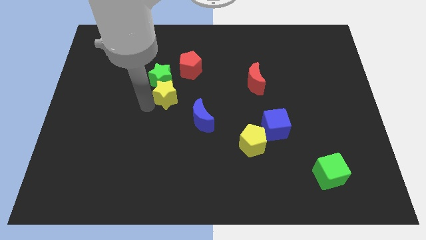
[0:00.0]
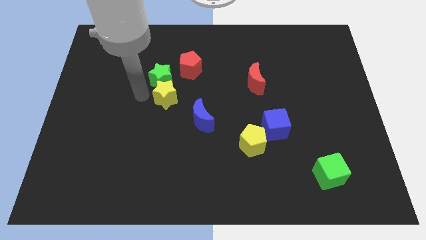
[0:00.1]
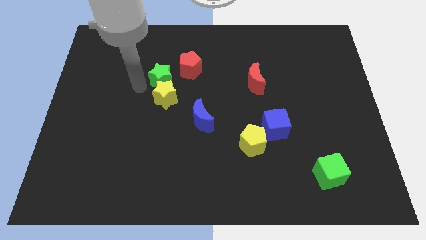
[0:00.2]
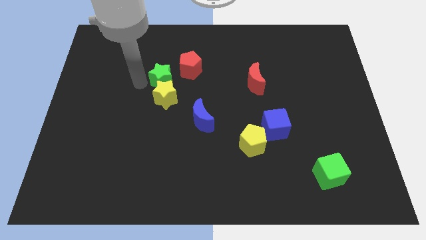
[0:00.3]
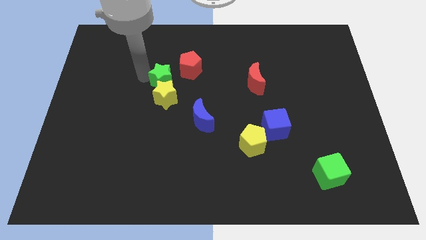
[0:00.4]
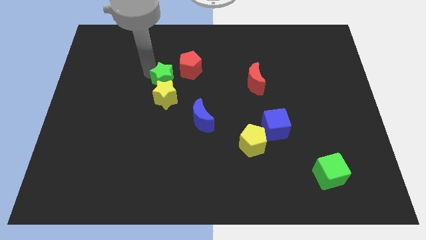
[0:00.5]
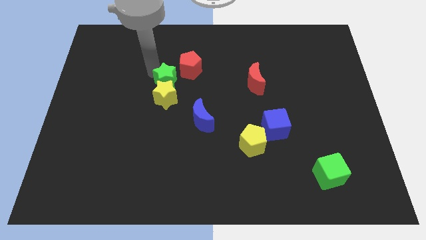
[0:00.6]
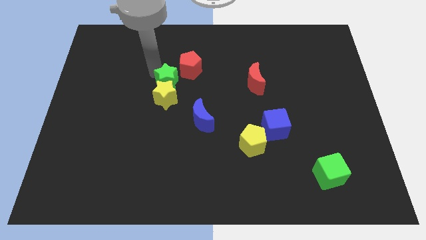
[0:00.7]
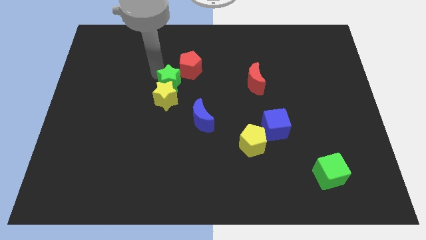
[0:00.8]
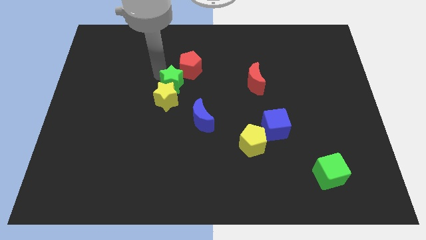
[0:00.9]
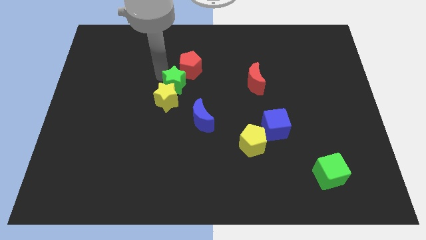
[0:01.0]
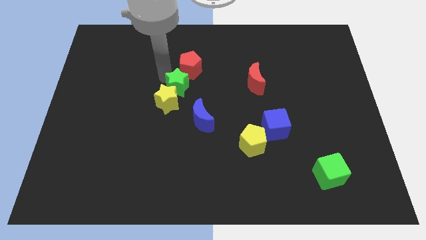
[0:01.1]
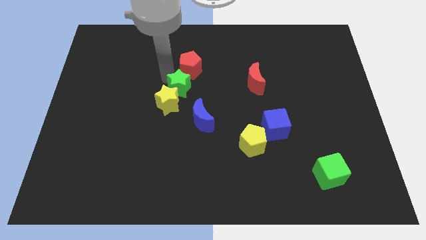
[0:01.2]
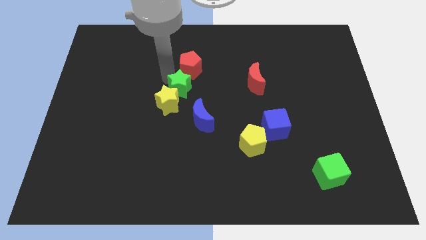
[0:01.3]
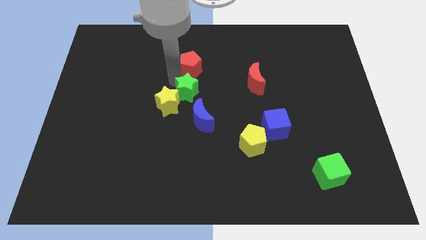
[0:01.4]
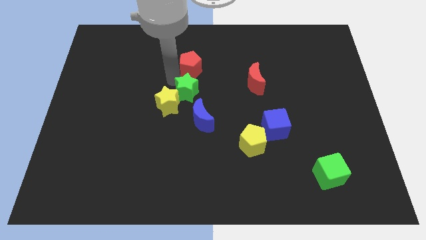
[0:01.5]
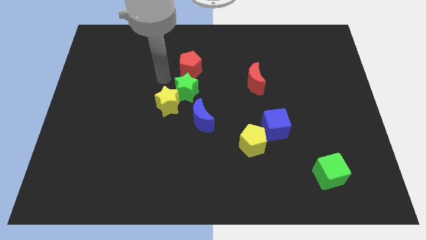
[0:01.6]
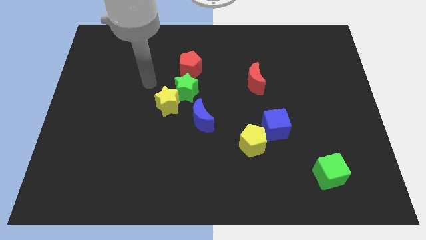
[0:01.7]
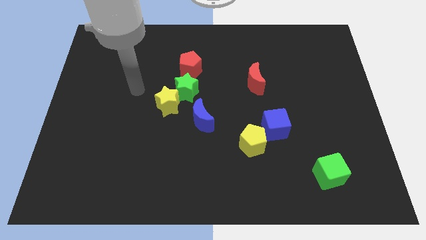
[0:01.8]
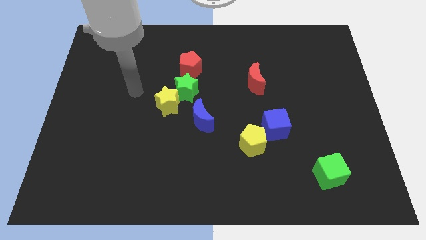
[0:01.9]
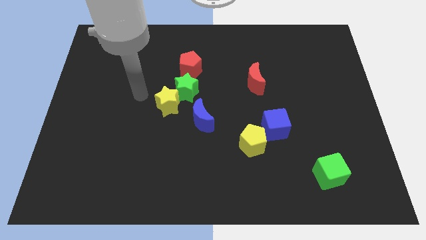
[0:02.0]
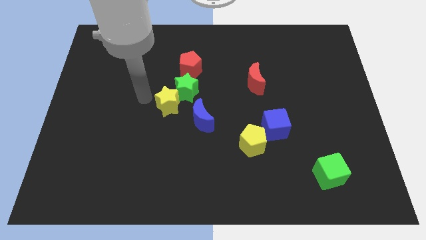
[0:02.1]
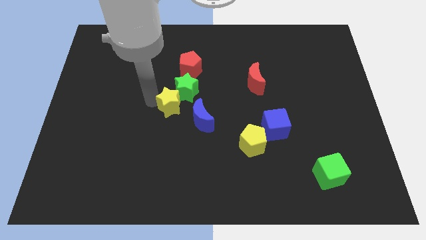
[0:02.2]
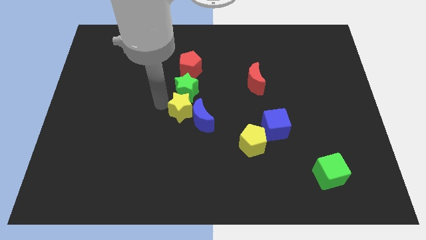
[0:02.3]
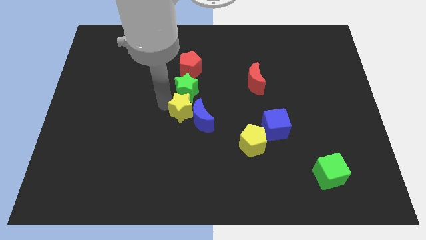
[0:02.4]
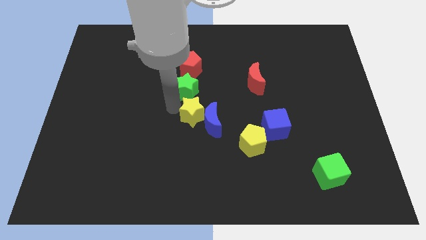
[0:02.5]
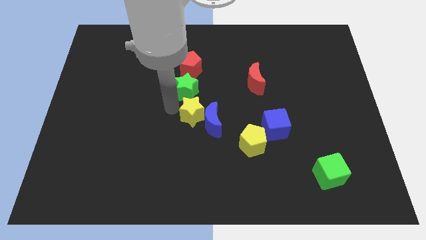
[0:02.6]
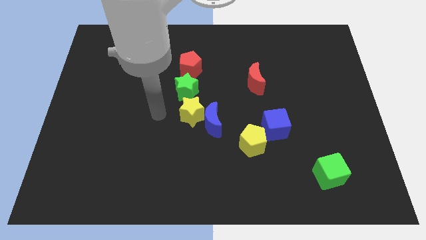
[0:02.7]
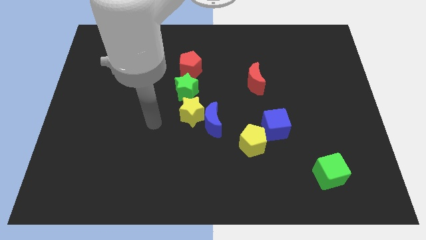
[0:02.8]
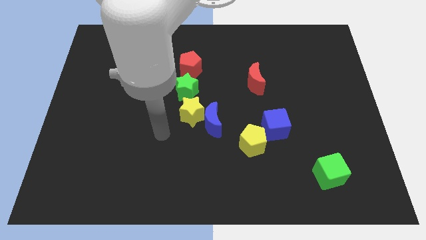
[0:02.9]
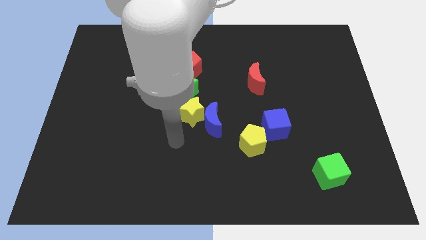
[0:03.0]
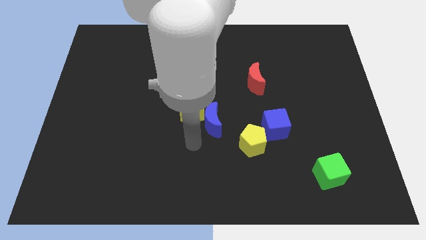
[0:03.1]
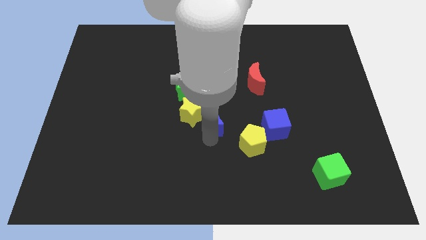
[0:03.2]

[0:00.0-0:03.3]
move yellow star along with the green star

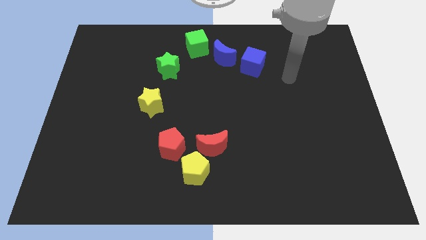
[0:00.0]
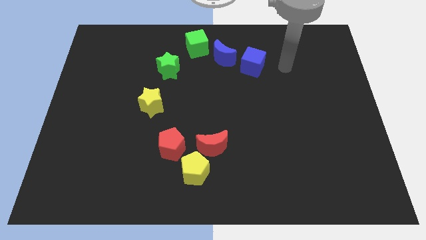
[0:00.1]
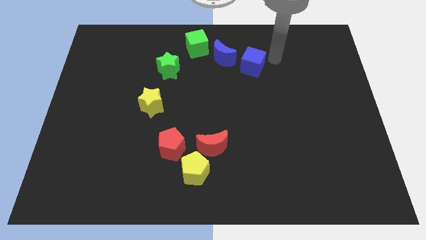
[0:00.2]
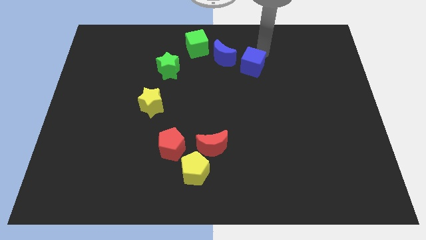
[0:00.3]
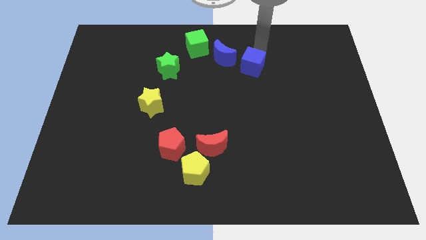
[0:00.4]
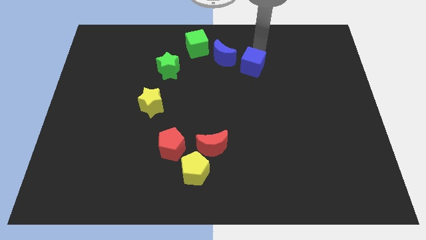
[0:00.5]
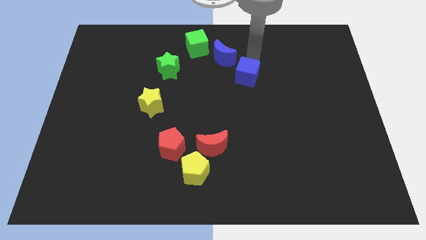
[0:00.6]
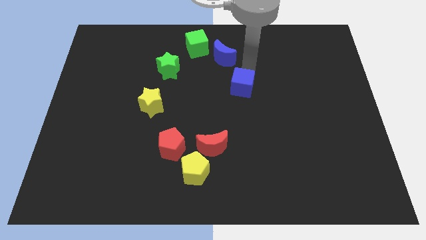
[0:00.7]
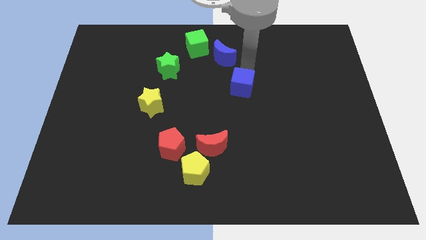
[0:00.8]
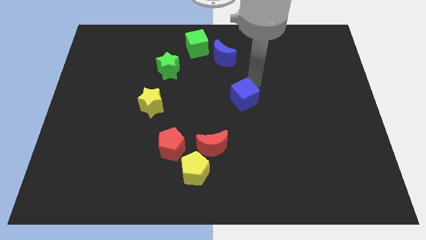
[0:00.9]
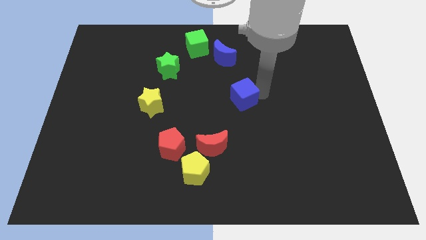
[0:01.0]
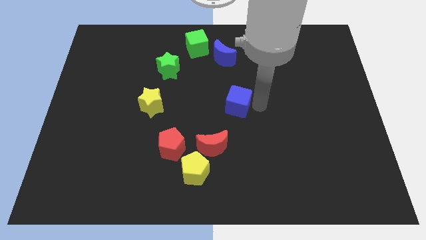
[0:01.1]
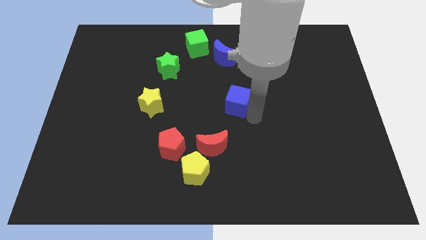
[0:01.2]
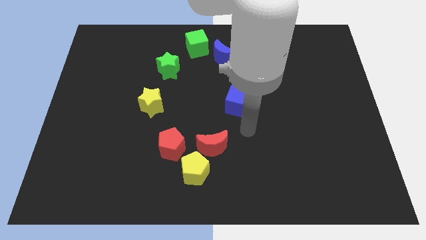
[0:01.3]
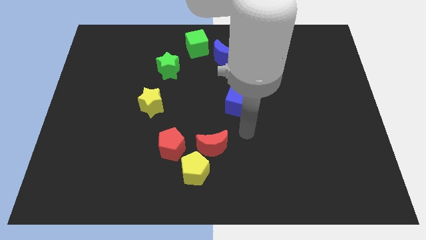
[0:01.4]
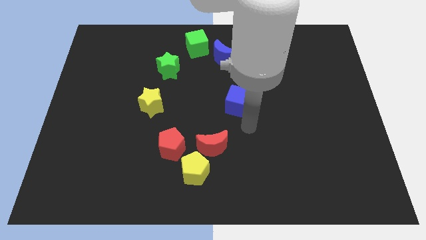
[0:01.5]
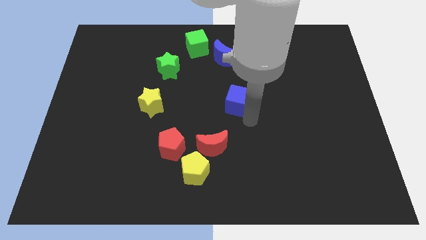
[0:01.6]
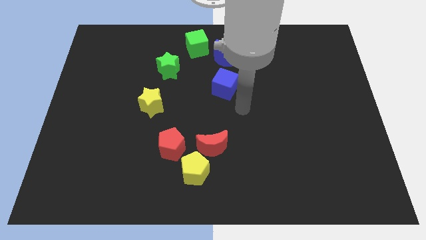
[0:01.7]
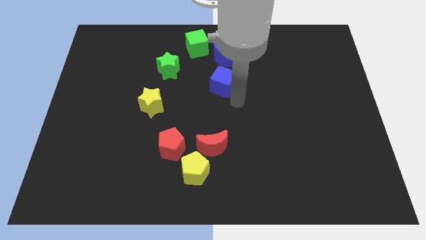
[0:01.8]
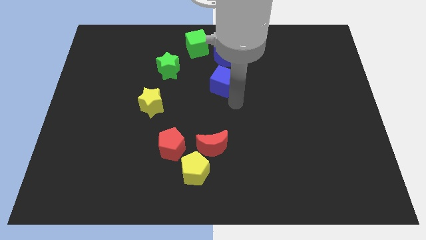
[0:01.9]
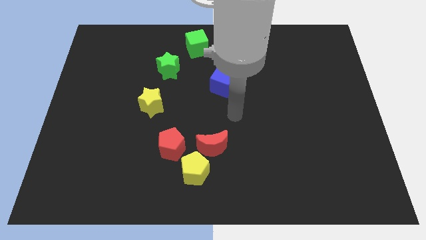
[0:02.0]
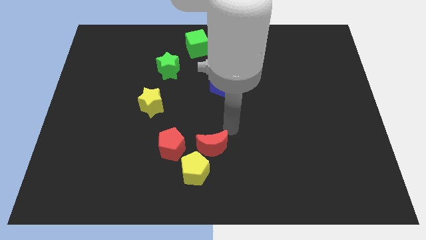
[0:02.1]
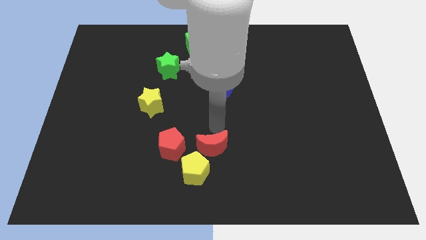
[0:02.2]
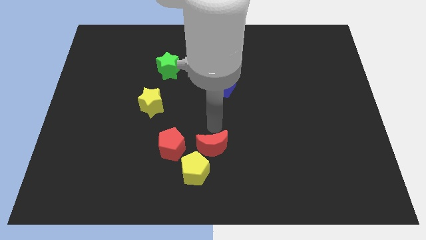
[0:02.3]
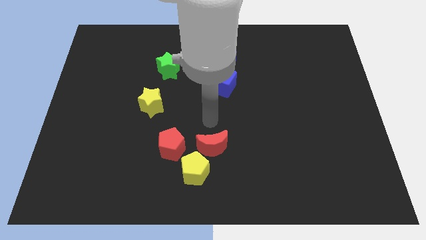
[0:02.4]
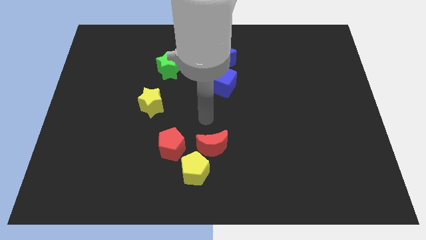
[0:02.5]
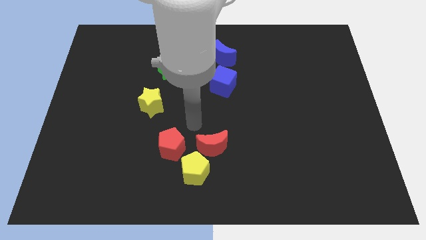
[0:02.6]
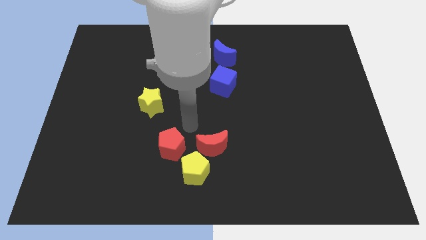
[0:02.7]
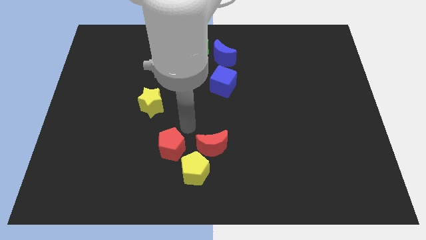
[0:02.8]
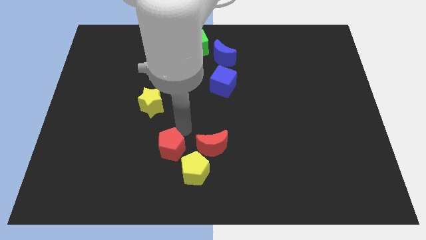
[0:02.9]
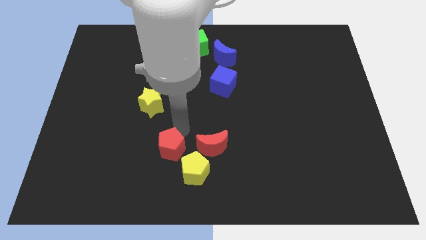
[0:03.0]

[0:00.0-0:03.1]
place the blue cube below the blue crescent

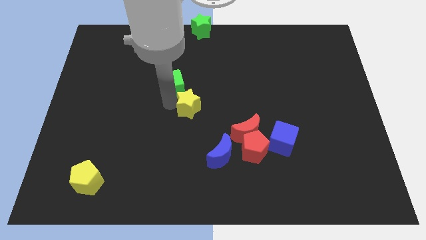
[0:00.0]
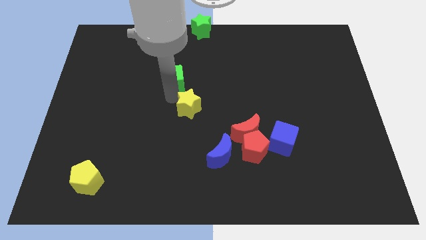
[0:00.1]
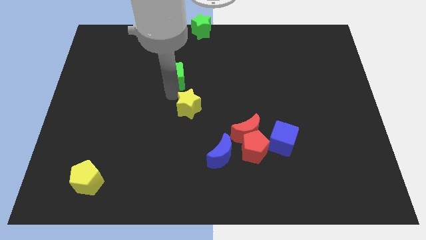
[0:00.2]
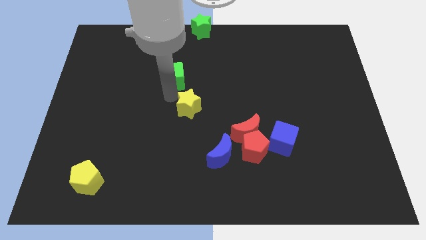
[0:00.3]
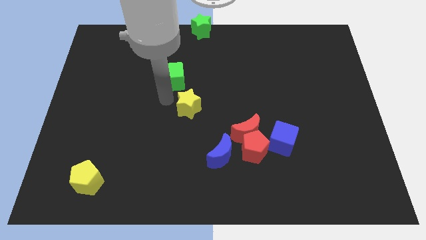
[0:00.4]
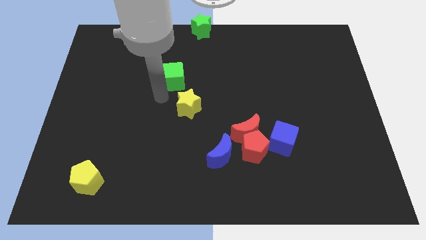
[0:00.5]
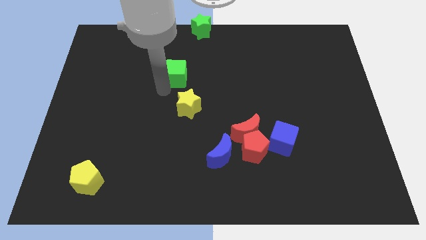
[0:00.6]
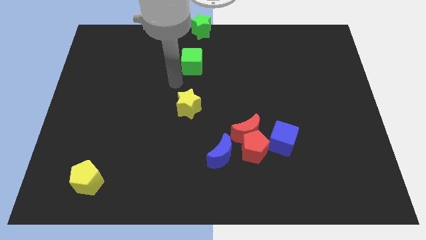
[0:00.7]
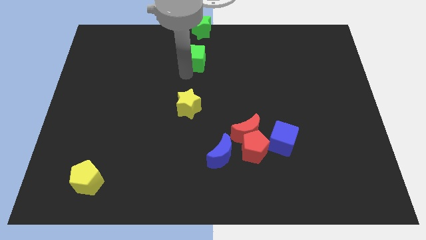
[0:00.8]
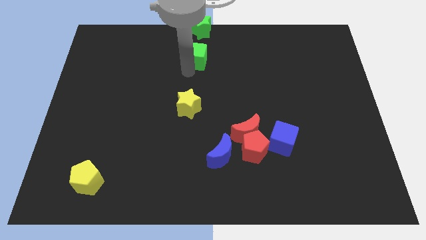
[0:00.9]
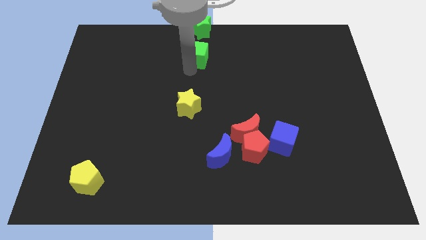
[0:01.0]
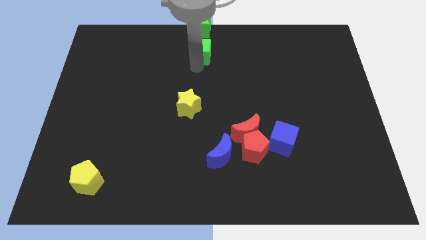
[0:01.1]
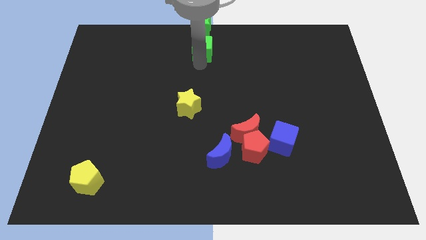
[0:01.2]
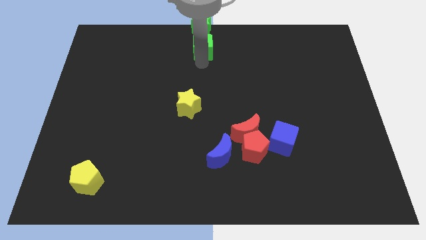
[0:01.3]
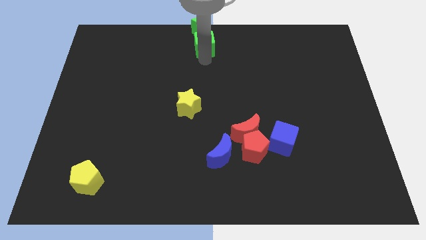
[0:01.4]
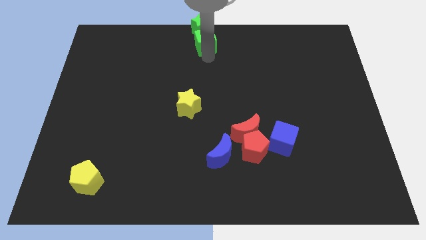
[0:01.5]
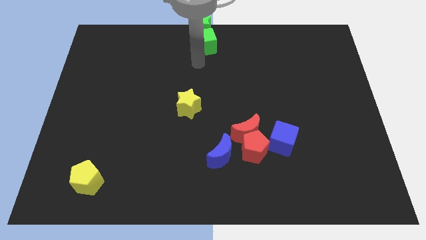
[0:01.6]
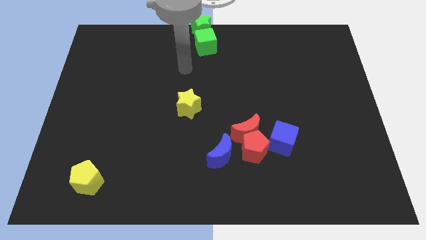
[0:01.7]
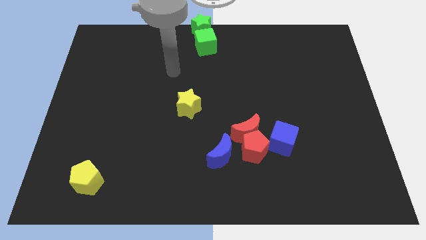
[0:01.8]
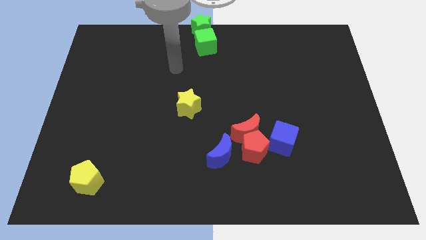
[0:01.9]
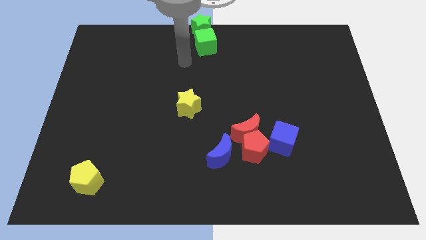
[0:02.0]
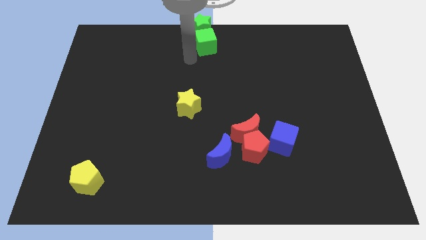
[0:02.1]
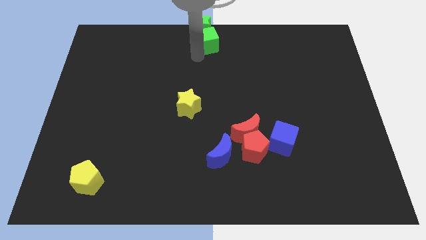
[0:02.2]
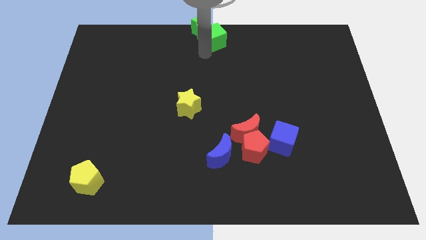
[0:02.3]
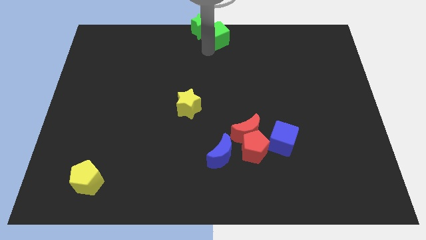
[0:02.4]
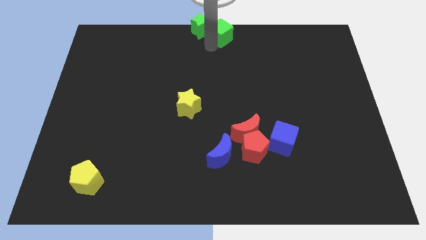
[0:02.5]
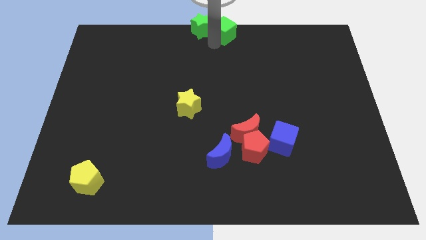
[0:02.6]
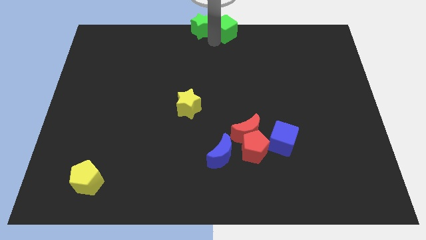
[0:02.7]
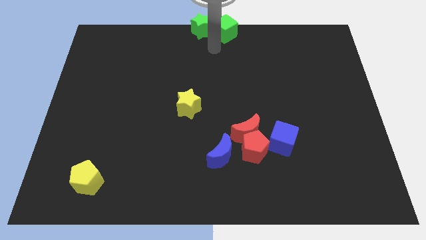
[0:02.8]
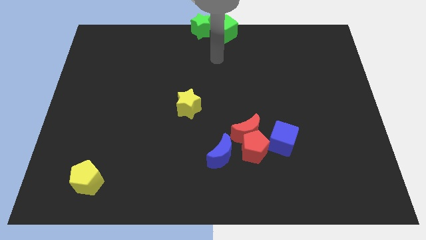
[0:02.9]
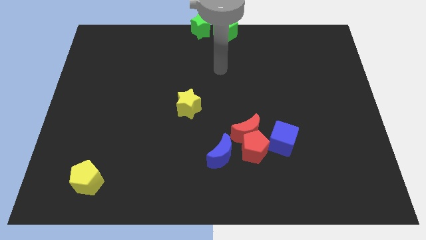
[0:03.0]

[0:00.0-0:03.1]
move the green cube to the right of the green star
